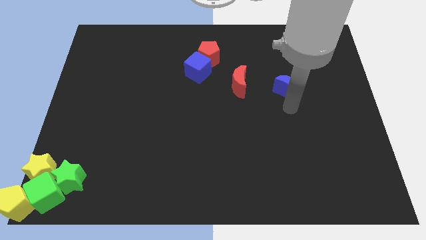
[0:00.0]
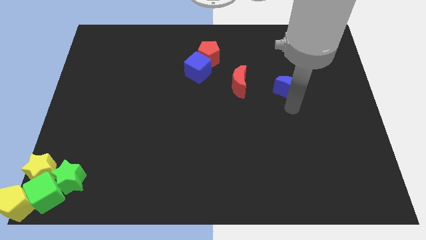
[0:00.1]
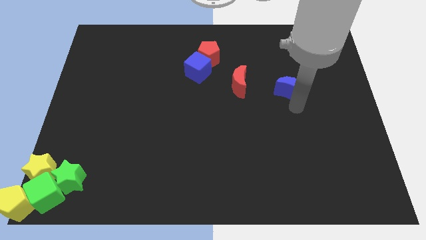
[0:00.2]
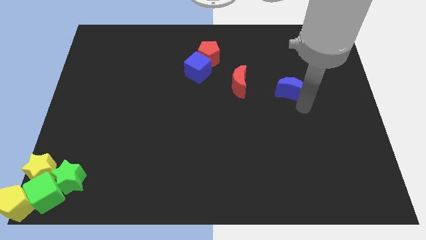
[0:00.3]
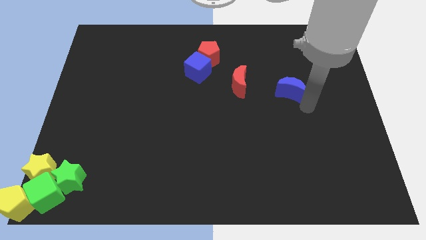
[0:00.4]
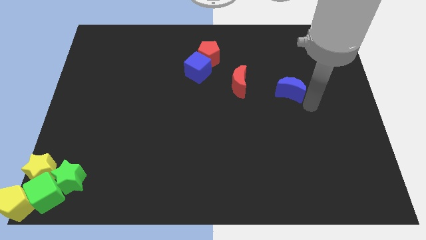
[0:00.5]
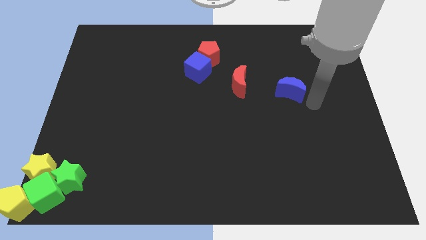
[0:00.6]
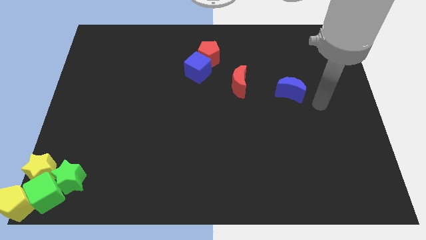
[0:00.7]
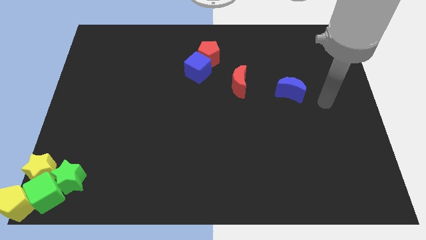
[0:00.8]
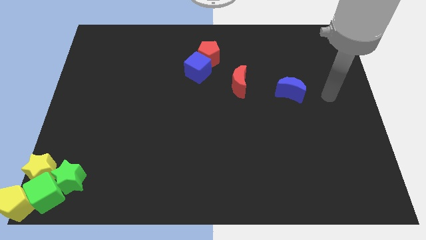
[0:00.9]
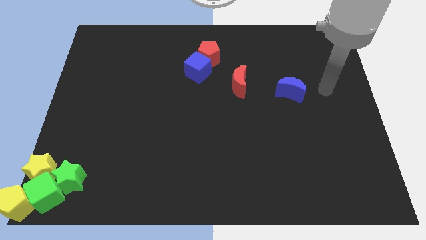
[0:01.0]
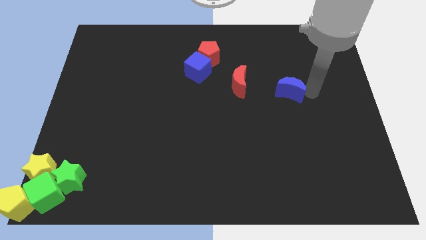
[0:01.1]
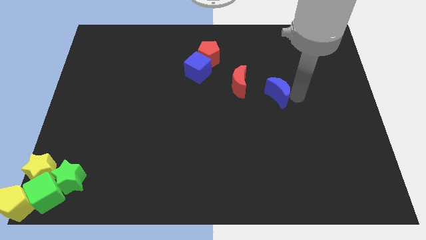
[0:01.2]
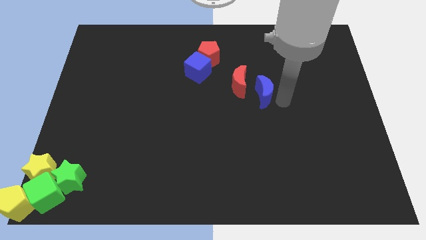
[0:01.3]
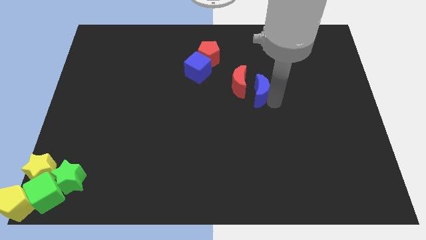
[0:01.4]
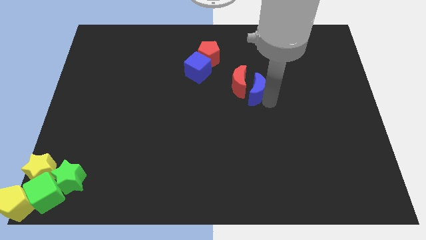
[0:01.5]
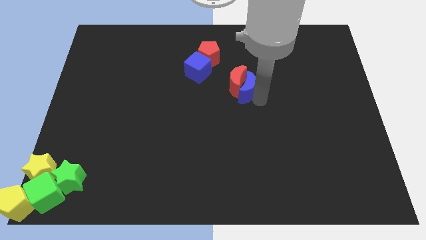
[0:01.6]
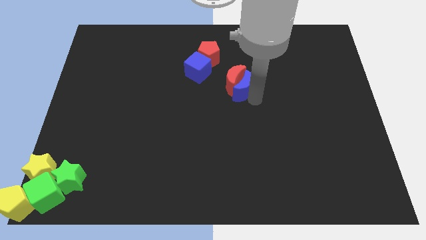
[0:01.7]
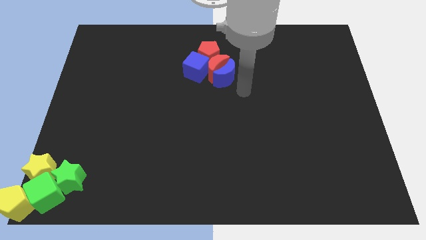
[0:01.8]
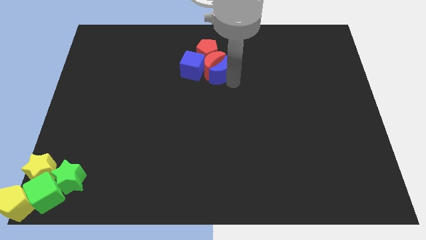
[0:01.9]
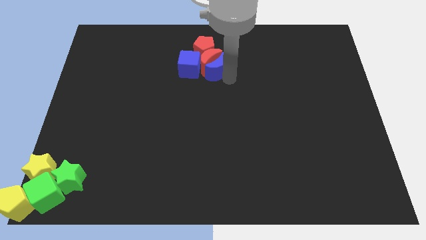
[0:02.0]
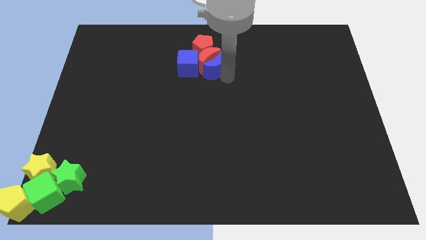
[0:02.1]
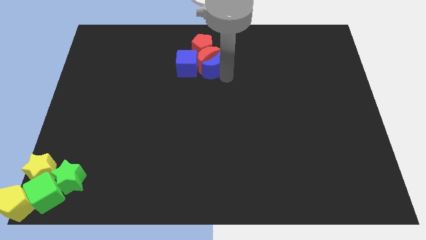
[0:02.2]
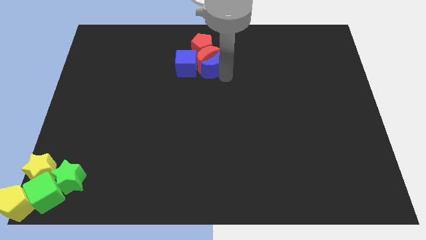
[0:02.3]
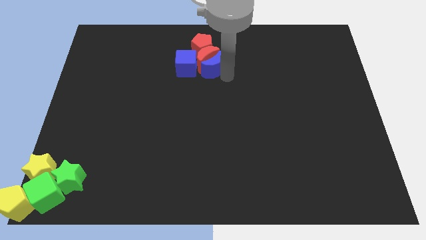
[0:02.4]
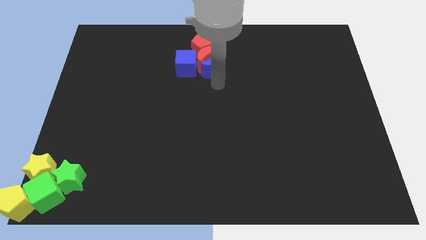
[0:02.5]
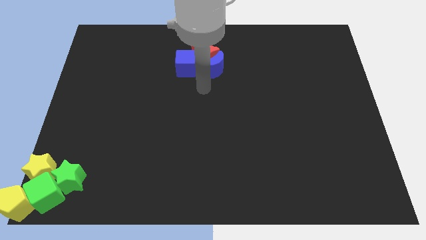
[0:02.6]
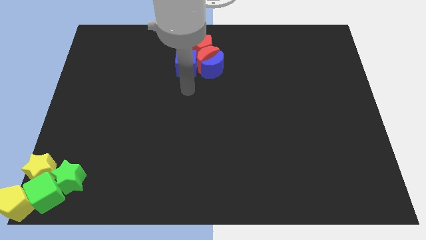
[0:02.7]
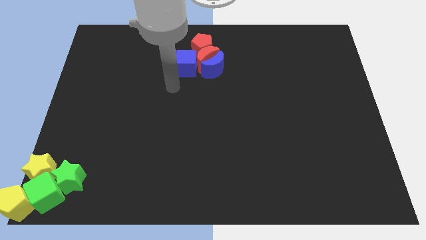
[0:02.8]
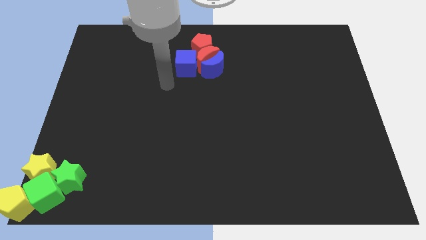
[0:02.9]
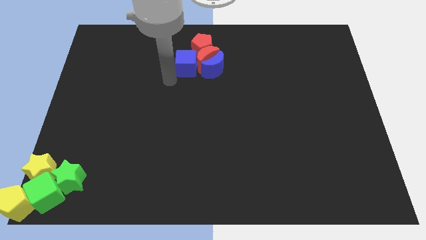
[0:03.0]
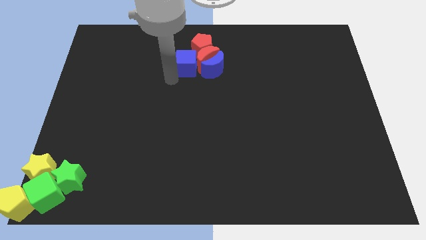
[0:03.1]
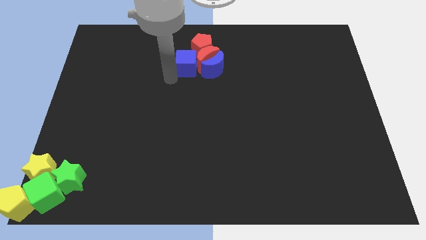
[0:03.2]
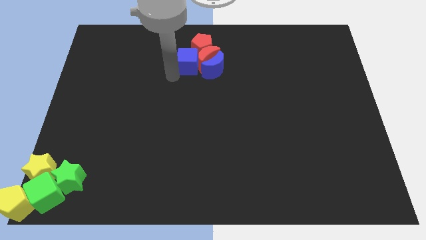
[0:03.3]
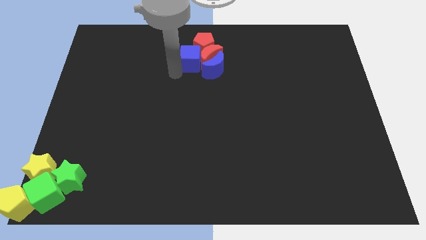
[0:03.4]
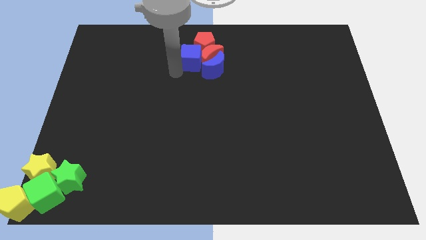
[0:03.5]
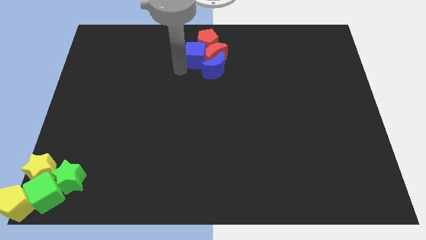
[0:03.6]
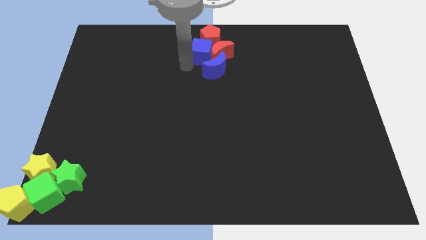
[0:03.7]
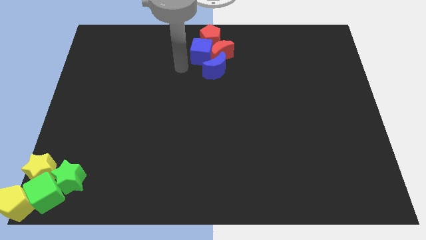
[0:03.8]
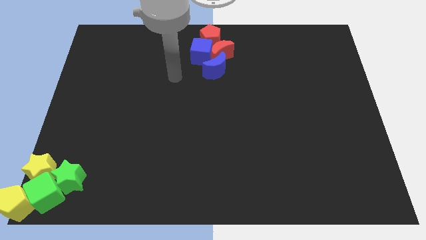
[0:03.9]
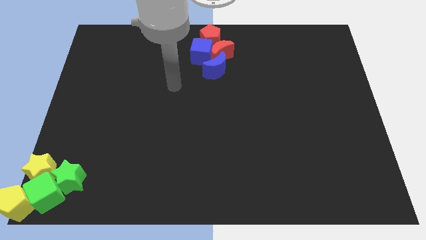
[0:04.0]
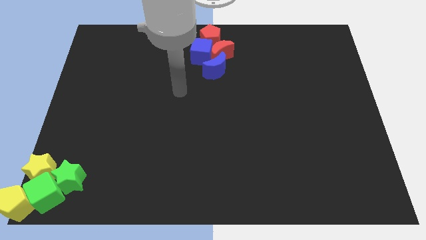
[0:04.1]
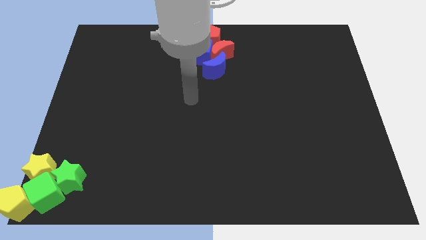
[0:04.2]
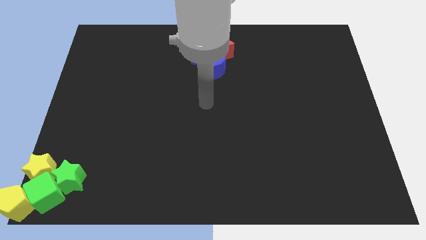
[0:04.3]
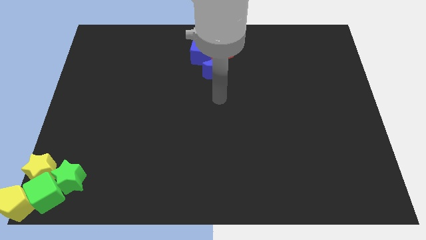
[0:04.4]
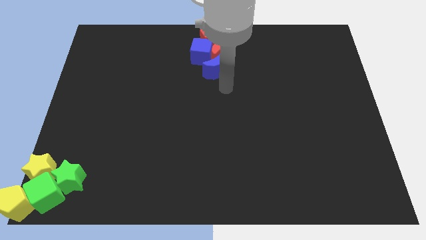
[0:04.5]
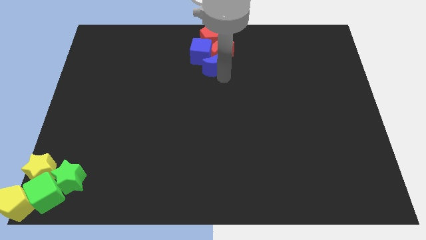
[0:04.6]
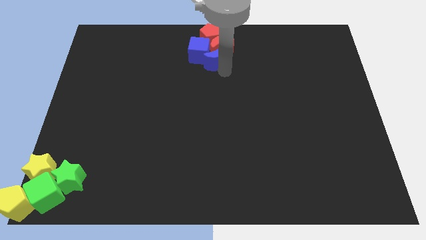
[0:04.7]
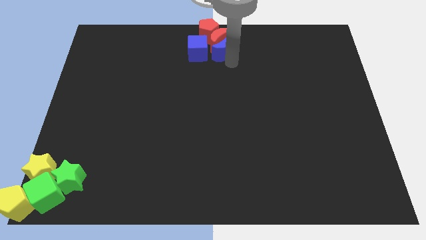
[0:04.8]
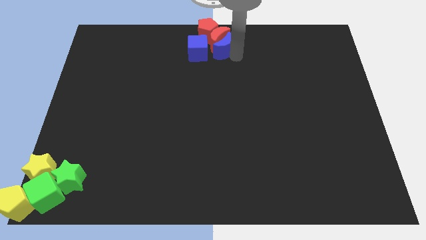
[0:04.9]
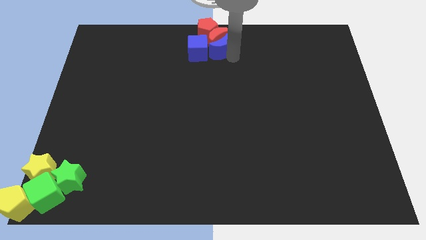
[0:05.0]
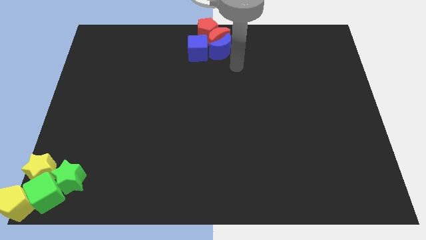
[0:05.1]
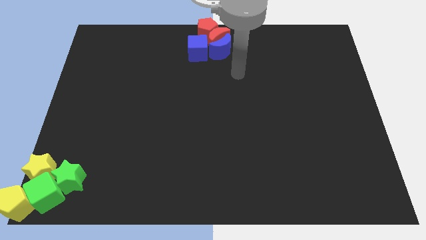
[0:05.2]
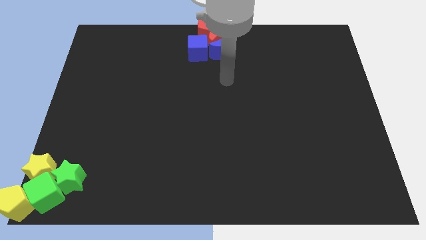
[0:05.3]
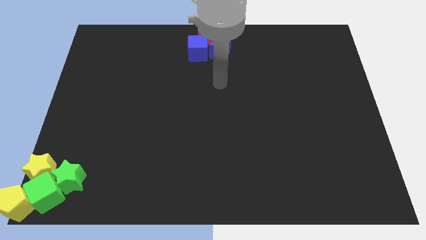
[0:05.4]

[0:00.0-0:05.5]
move blue moon and red moon into blue cube and red pentagon

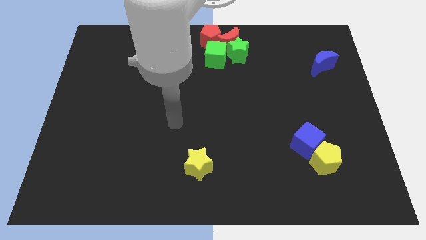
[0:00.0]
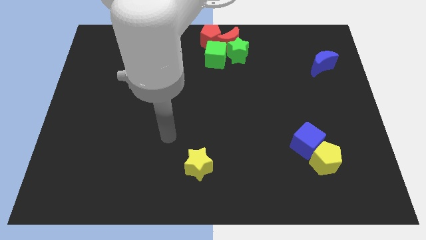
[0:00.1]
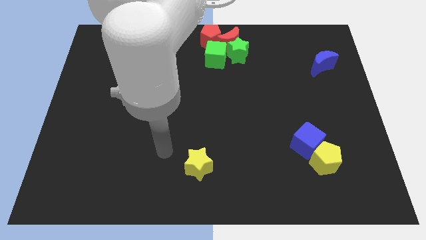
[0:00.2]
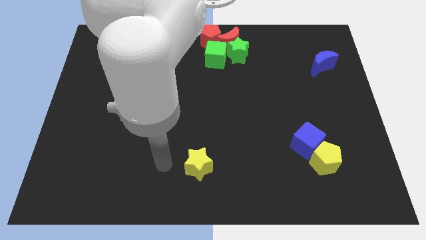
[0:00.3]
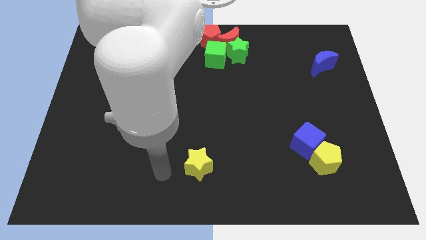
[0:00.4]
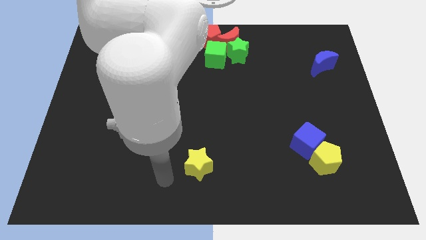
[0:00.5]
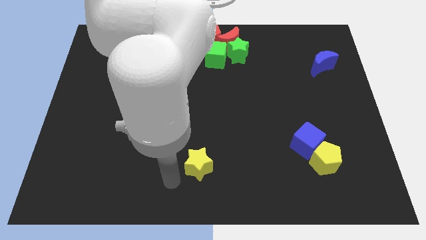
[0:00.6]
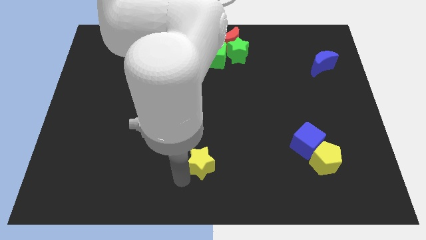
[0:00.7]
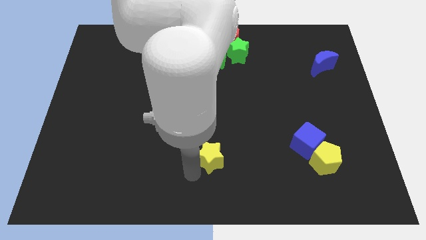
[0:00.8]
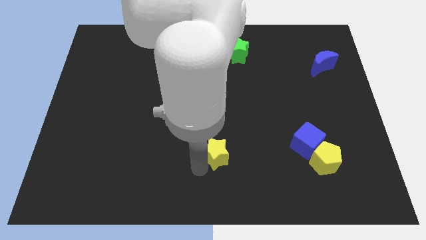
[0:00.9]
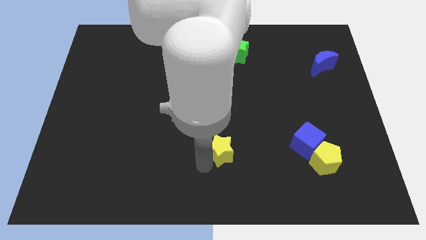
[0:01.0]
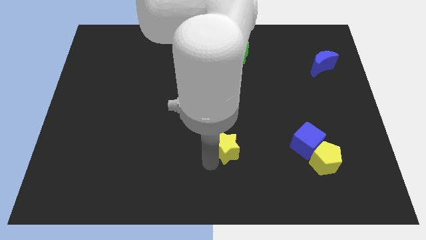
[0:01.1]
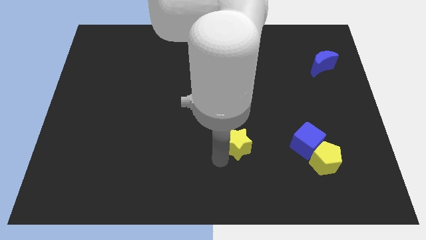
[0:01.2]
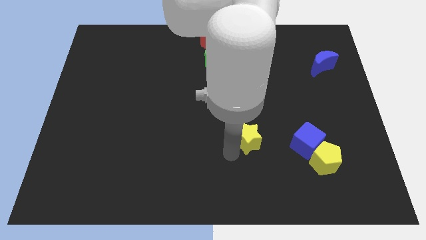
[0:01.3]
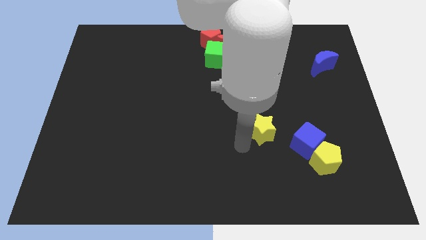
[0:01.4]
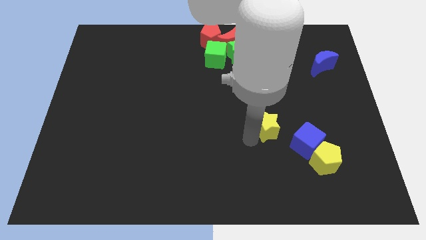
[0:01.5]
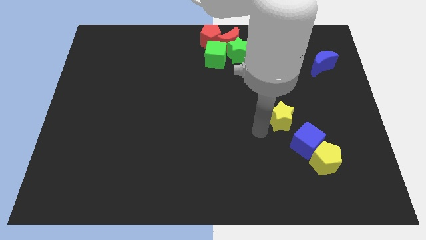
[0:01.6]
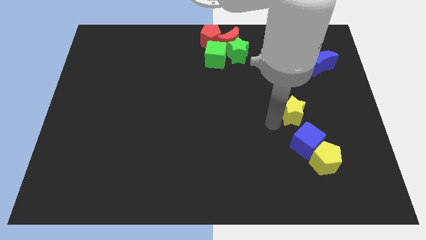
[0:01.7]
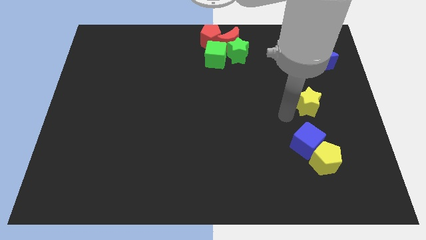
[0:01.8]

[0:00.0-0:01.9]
place the yellow star vertically above the blue cube

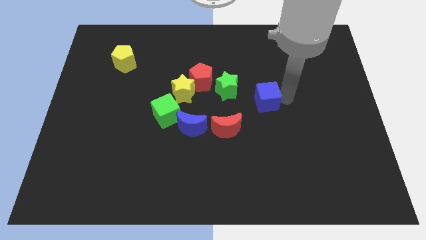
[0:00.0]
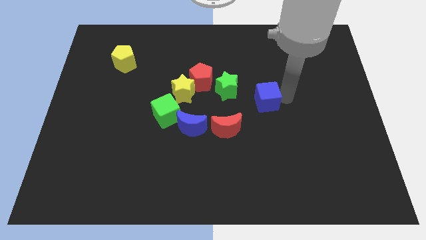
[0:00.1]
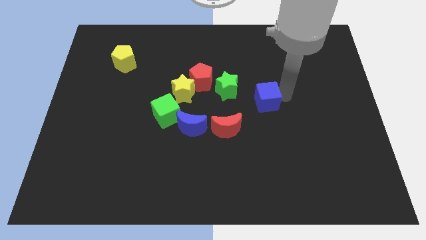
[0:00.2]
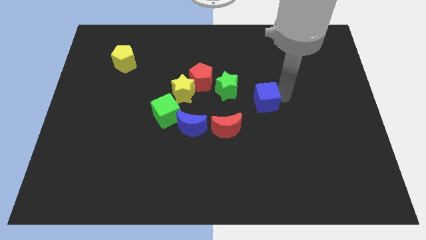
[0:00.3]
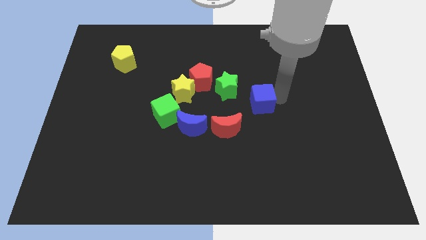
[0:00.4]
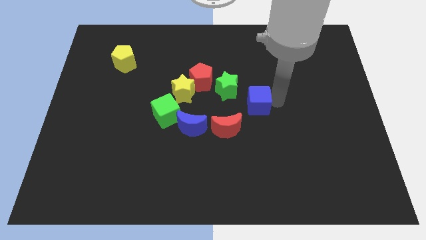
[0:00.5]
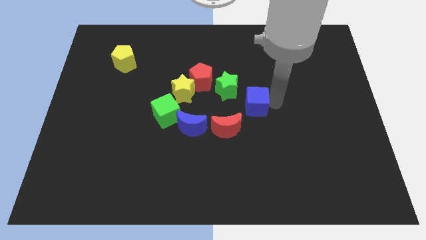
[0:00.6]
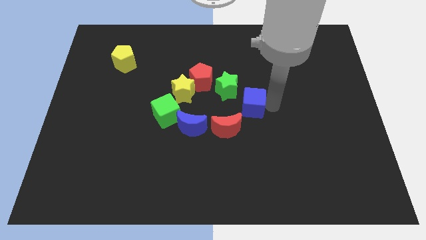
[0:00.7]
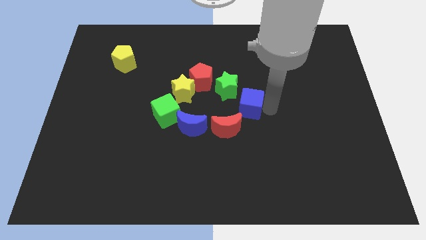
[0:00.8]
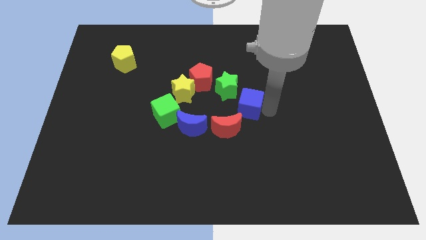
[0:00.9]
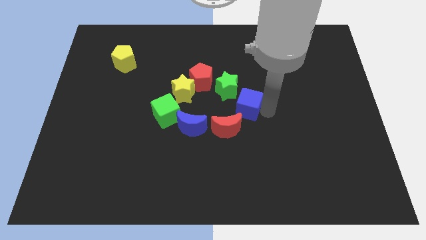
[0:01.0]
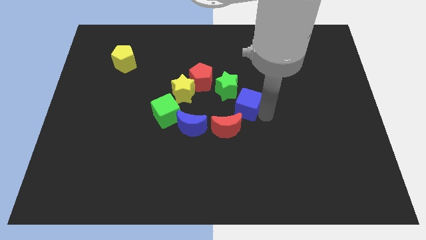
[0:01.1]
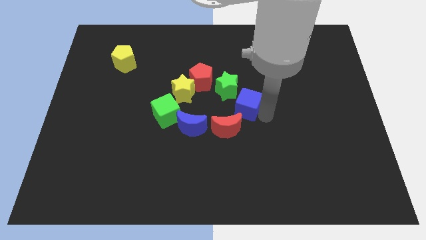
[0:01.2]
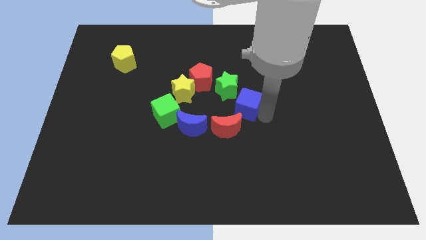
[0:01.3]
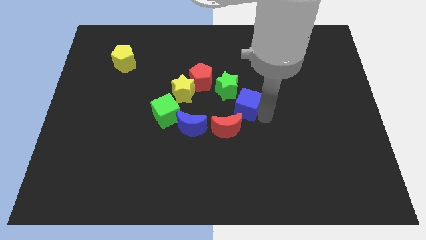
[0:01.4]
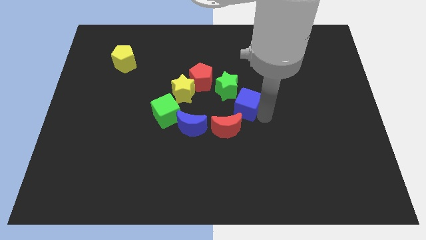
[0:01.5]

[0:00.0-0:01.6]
place blue cube in between red crescent and green star
